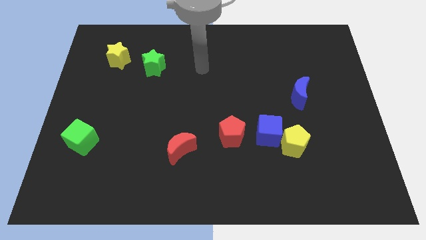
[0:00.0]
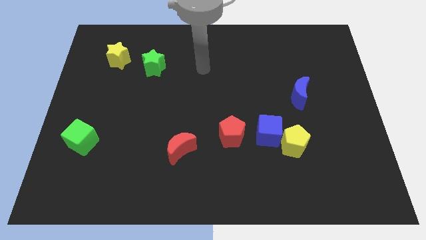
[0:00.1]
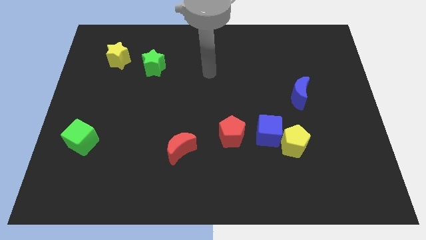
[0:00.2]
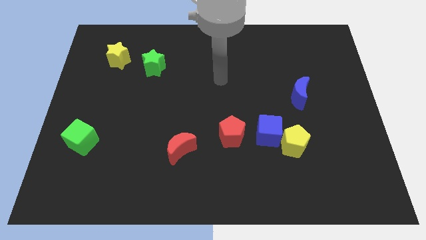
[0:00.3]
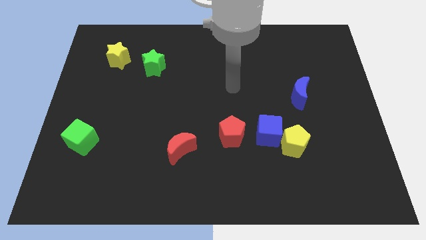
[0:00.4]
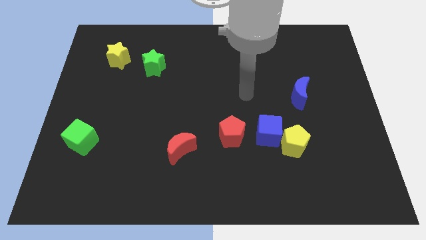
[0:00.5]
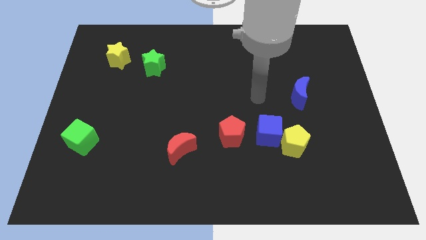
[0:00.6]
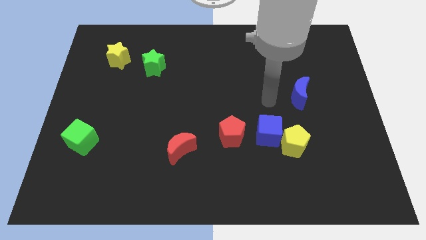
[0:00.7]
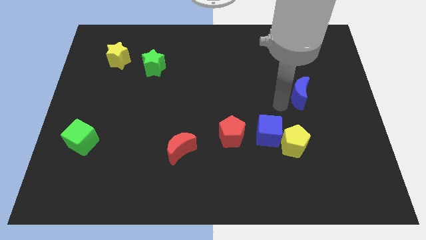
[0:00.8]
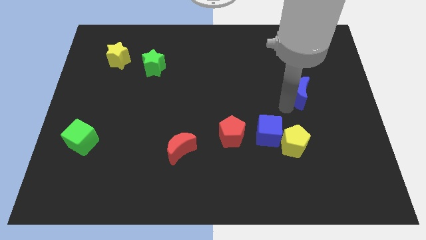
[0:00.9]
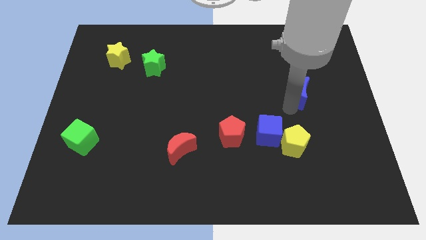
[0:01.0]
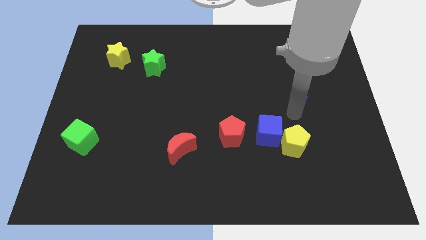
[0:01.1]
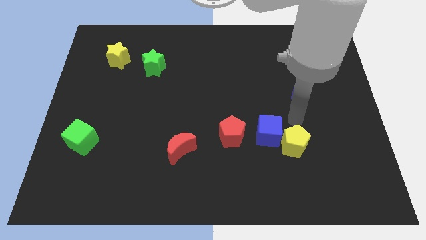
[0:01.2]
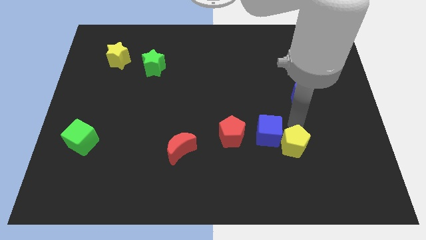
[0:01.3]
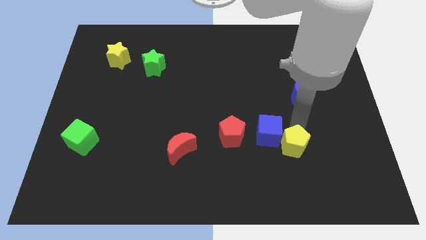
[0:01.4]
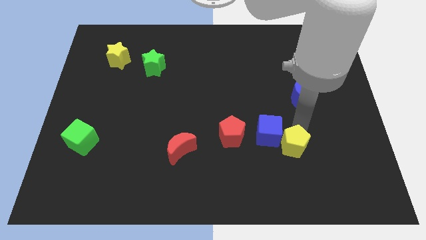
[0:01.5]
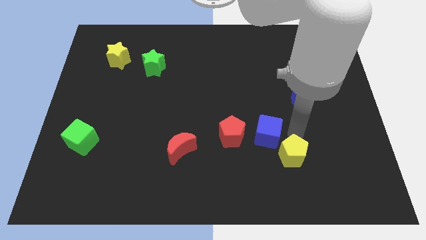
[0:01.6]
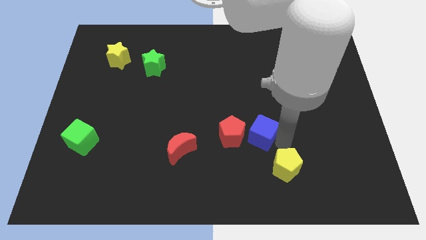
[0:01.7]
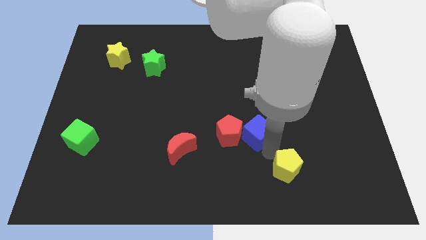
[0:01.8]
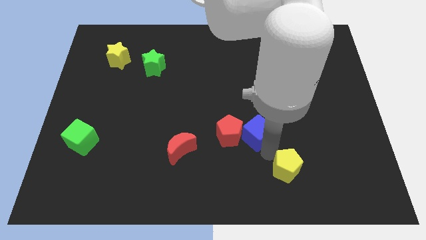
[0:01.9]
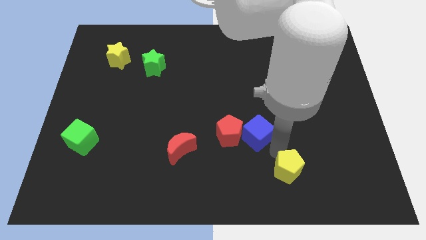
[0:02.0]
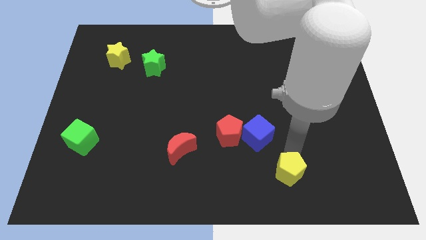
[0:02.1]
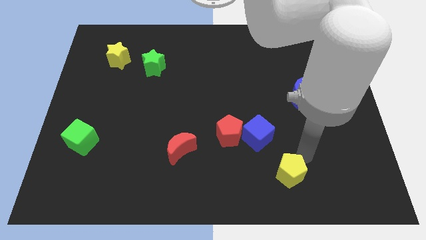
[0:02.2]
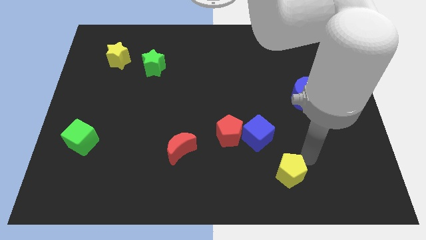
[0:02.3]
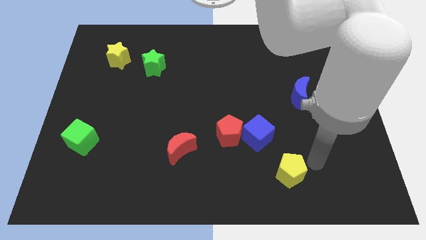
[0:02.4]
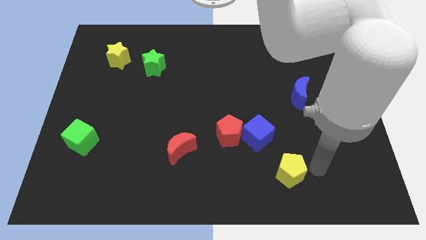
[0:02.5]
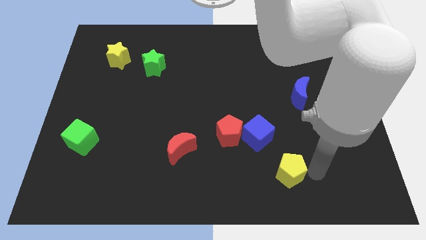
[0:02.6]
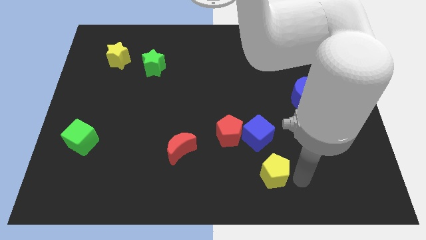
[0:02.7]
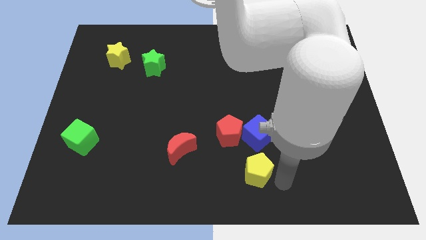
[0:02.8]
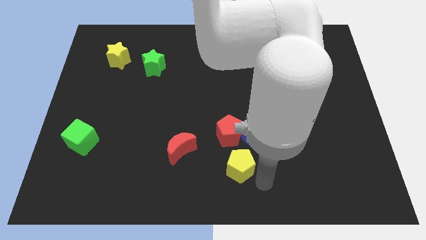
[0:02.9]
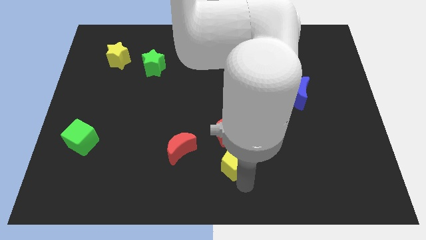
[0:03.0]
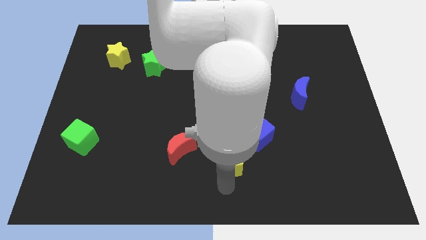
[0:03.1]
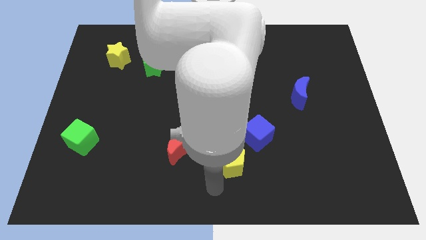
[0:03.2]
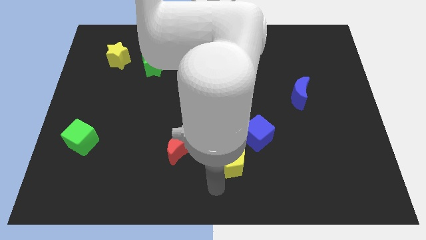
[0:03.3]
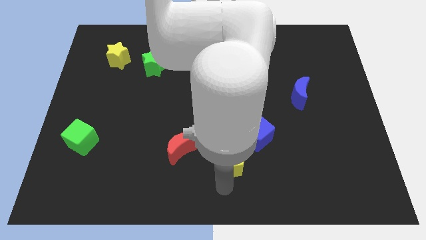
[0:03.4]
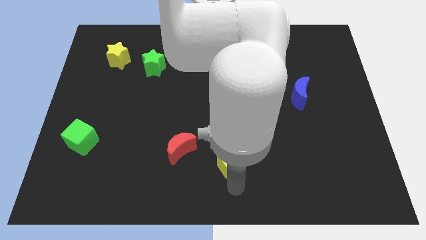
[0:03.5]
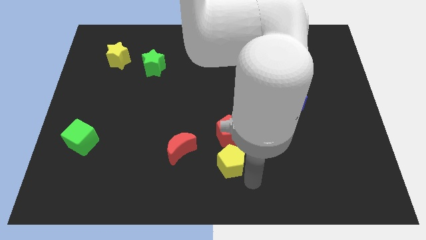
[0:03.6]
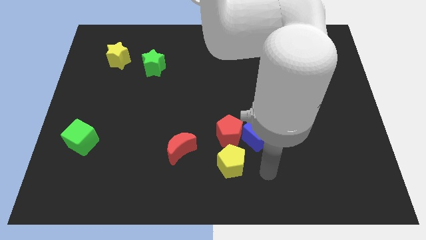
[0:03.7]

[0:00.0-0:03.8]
place the yellow pentagon underneath the red pentagon

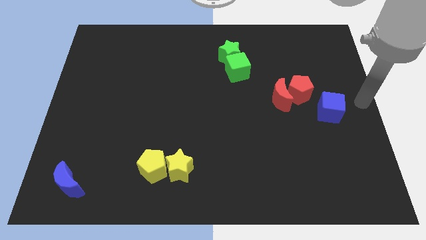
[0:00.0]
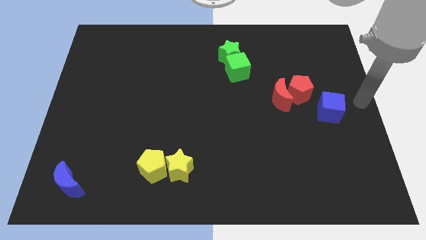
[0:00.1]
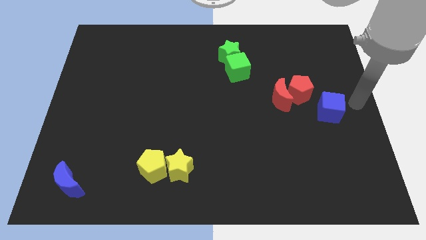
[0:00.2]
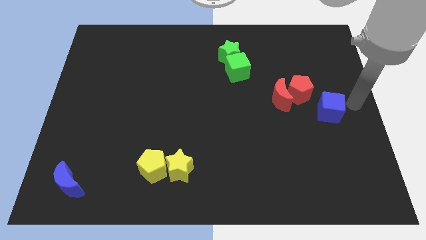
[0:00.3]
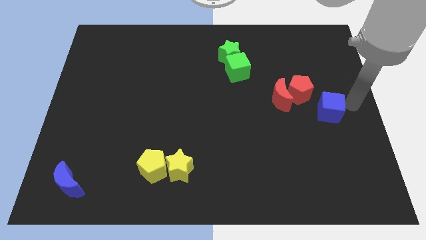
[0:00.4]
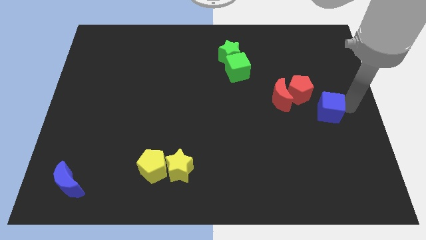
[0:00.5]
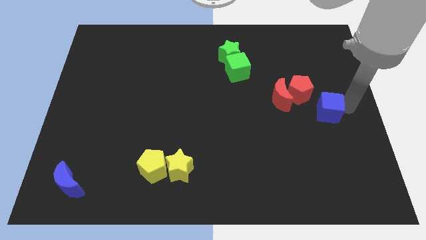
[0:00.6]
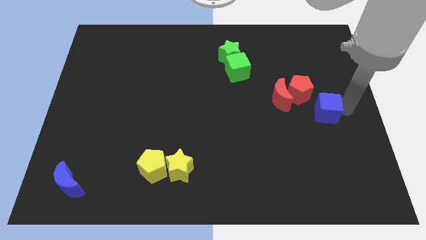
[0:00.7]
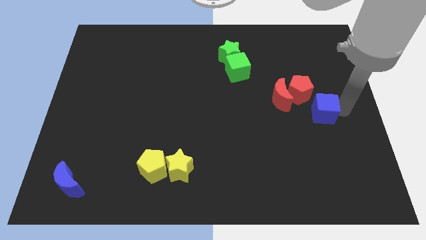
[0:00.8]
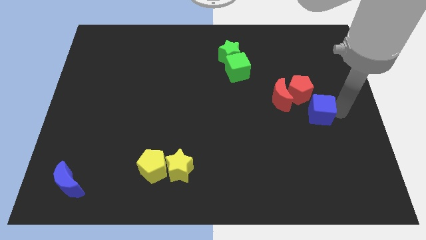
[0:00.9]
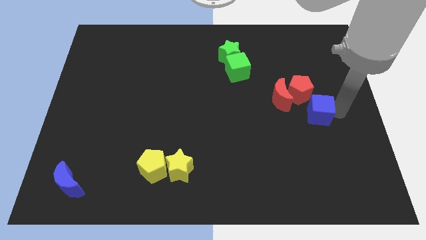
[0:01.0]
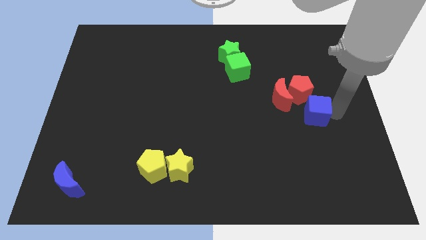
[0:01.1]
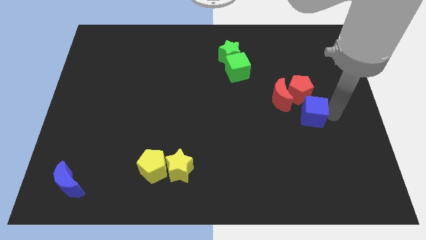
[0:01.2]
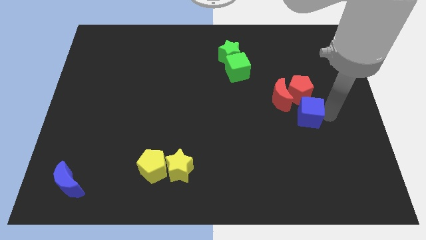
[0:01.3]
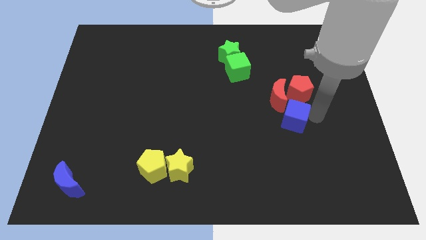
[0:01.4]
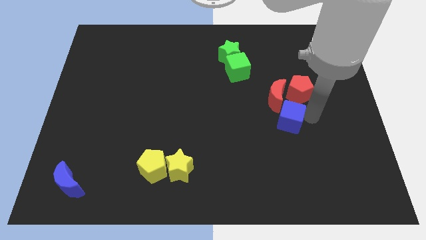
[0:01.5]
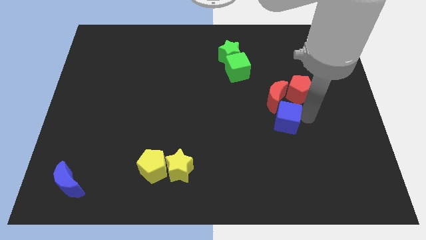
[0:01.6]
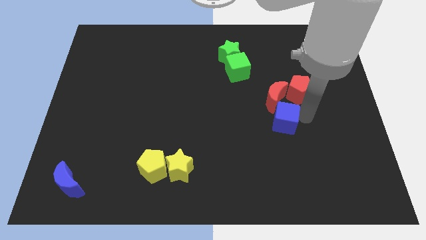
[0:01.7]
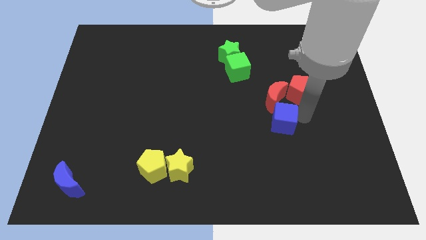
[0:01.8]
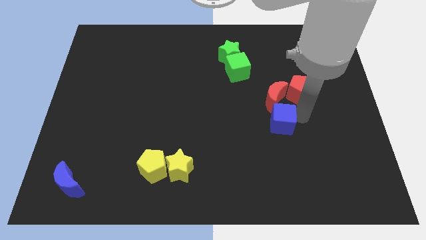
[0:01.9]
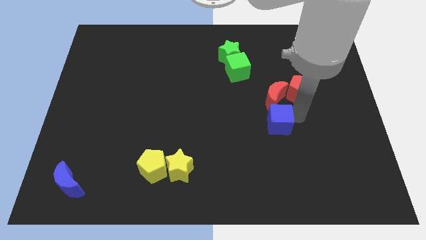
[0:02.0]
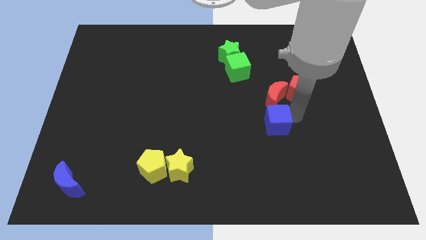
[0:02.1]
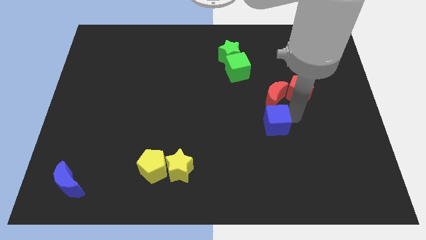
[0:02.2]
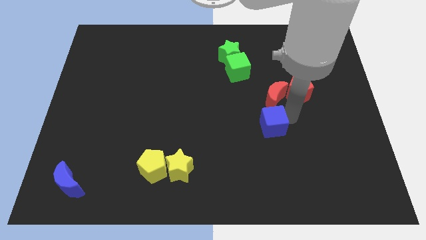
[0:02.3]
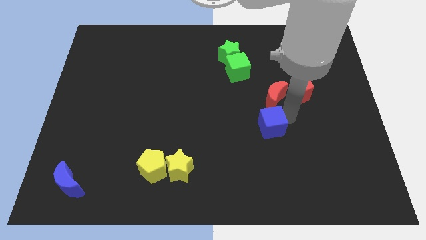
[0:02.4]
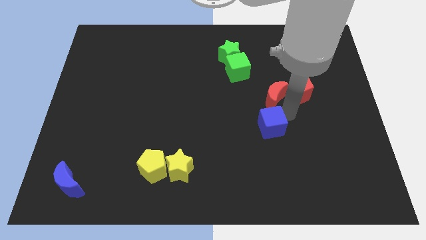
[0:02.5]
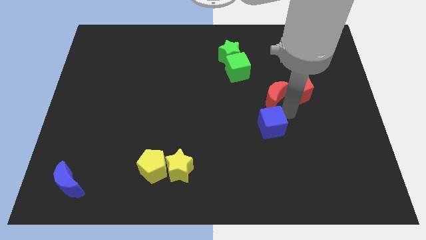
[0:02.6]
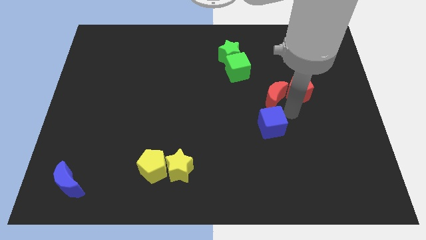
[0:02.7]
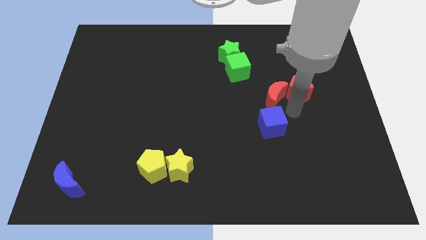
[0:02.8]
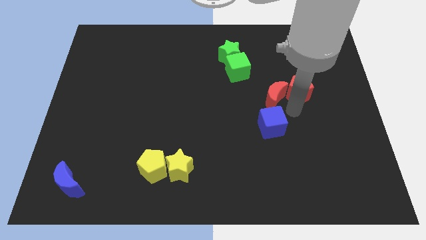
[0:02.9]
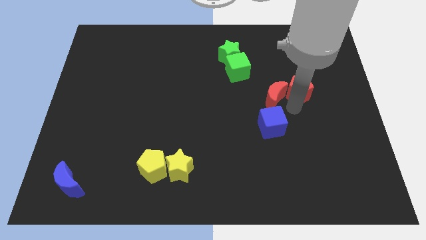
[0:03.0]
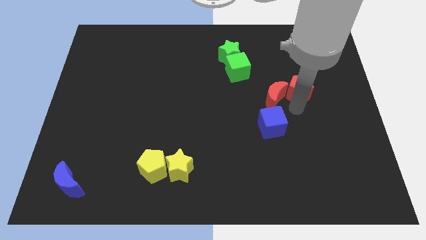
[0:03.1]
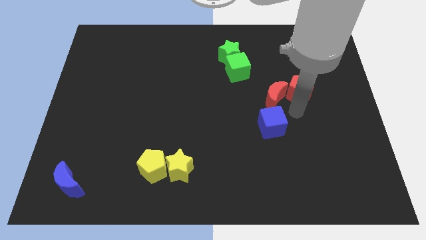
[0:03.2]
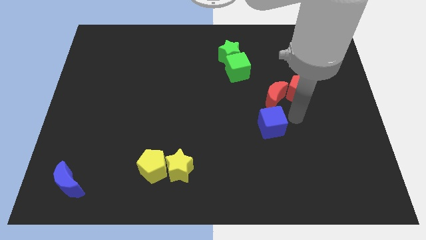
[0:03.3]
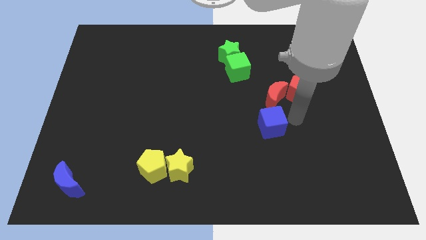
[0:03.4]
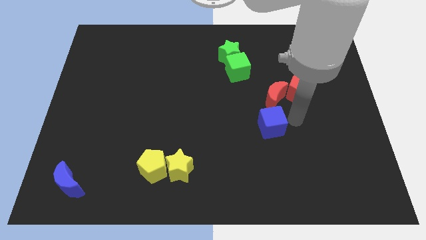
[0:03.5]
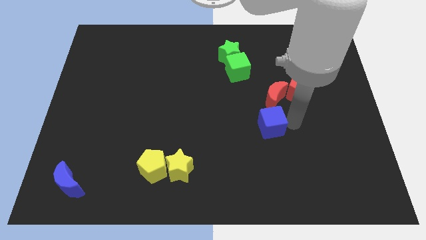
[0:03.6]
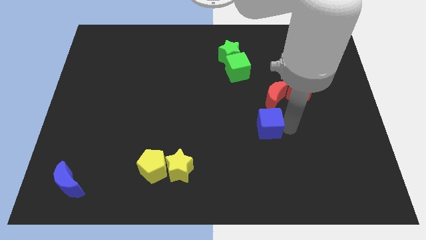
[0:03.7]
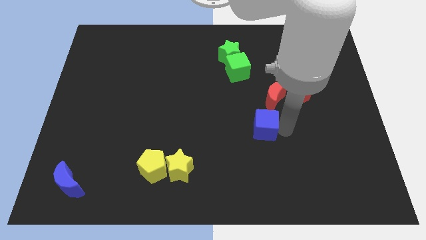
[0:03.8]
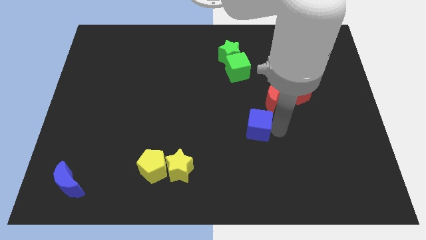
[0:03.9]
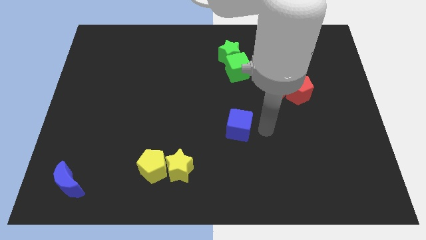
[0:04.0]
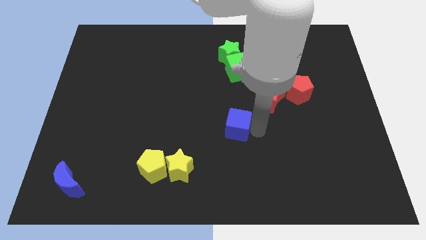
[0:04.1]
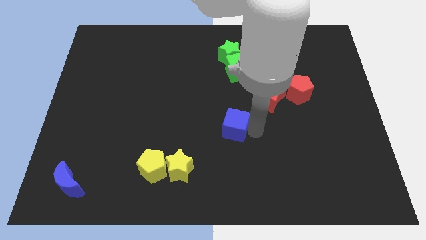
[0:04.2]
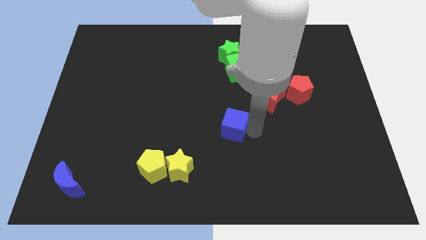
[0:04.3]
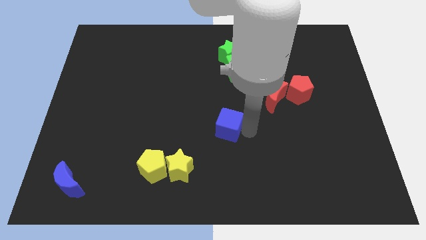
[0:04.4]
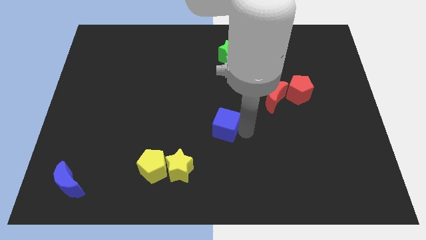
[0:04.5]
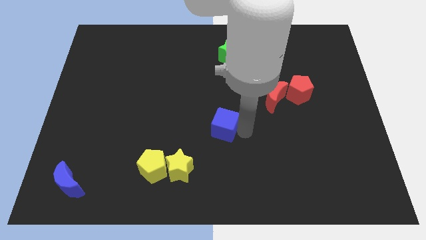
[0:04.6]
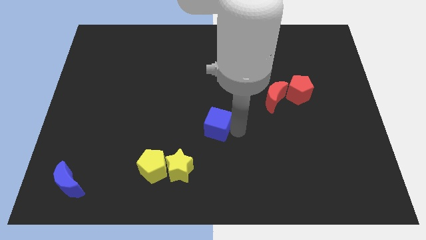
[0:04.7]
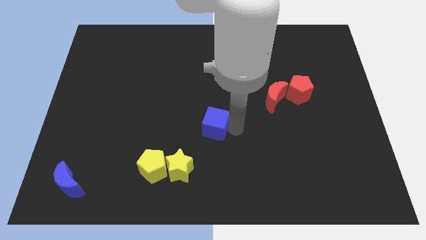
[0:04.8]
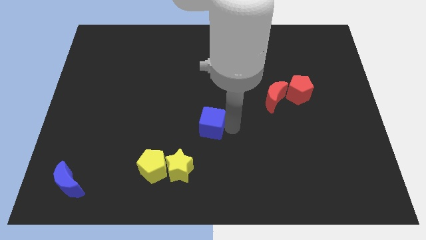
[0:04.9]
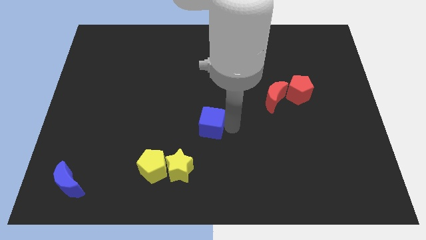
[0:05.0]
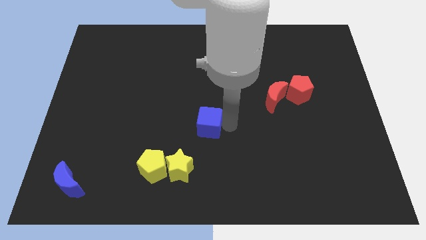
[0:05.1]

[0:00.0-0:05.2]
push the blue cube towards the left
